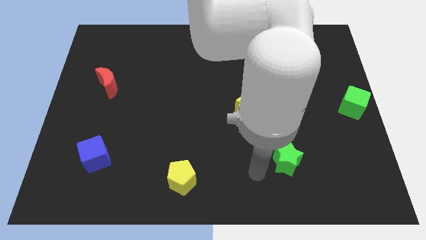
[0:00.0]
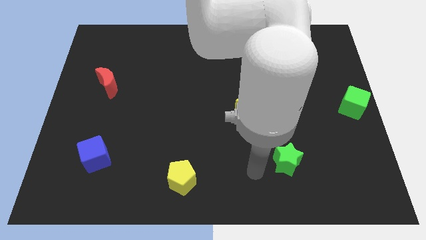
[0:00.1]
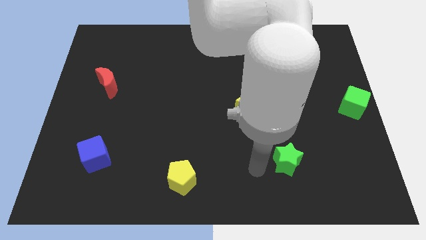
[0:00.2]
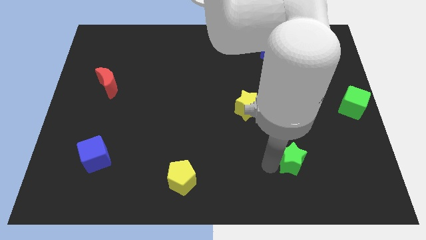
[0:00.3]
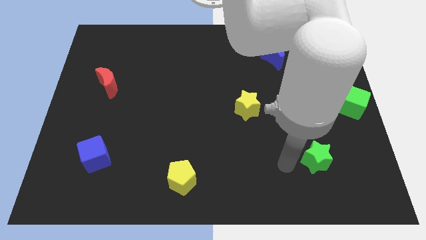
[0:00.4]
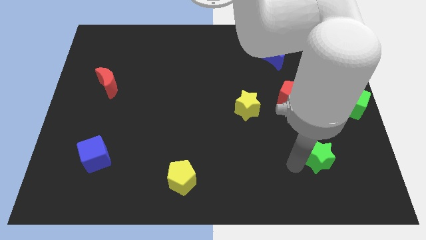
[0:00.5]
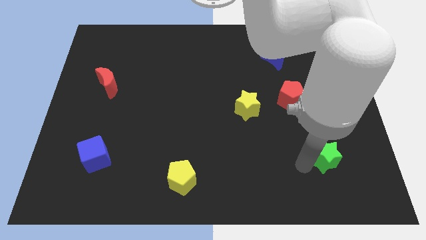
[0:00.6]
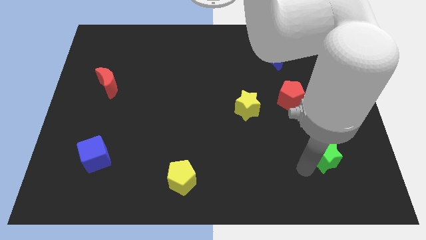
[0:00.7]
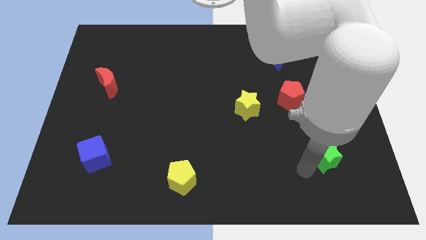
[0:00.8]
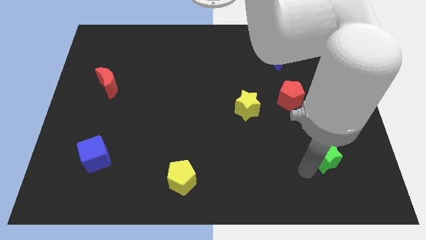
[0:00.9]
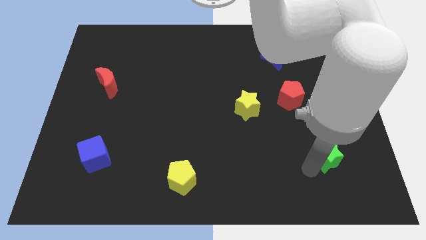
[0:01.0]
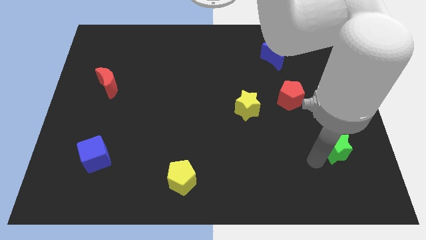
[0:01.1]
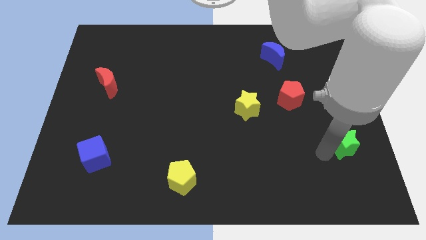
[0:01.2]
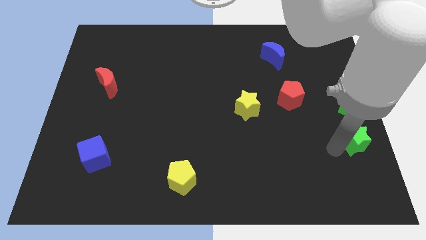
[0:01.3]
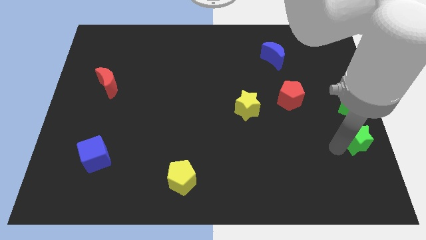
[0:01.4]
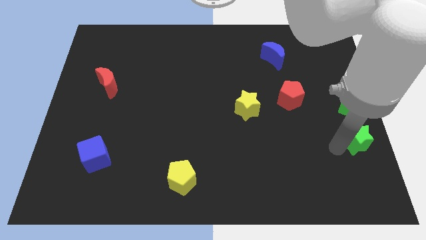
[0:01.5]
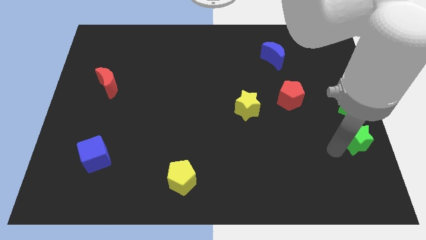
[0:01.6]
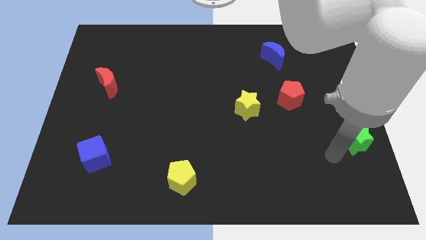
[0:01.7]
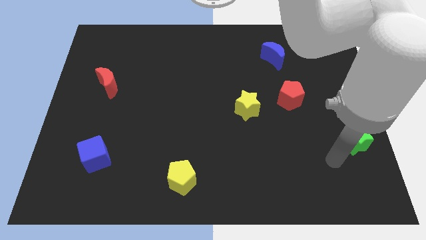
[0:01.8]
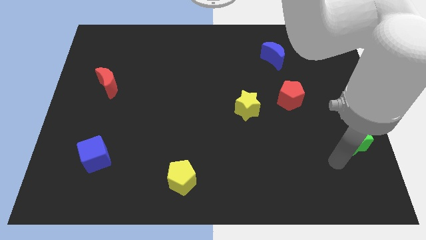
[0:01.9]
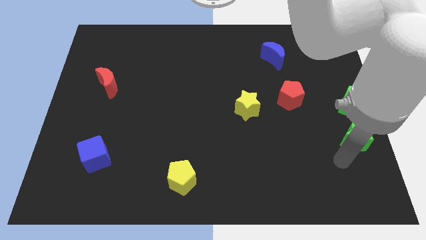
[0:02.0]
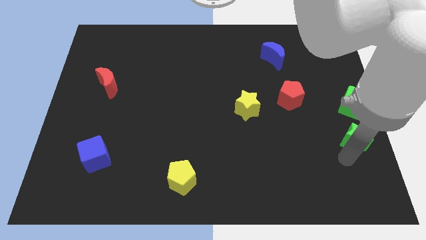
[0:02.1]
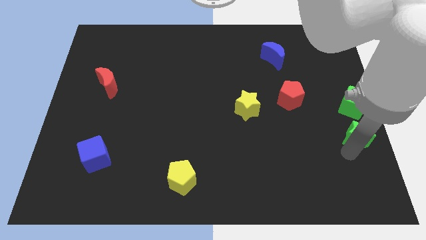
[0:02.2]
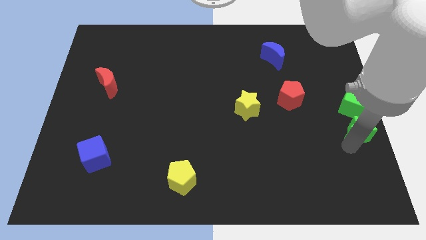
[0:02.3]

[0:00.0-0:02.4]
push the green star to the right side of the board

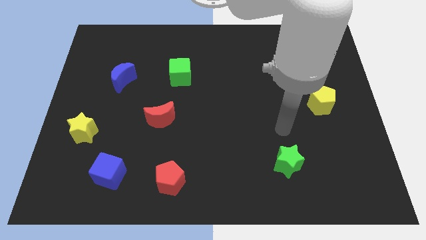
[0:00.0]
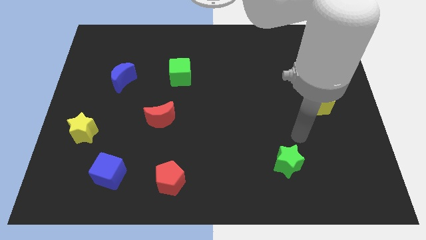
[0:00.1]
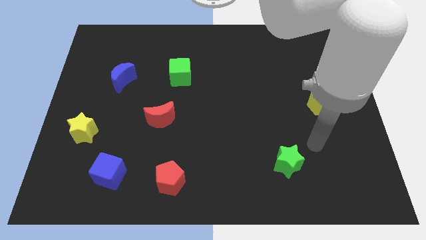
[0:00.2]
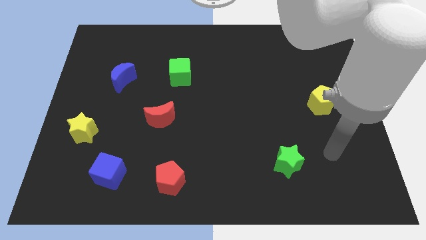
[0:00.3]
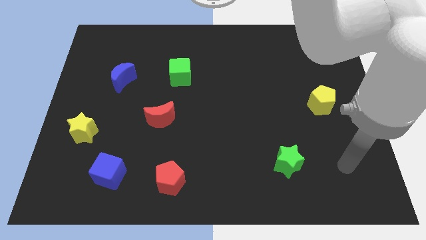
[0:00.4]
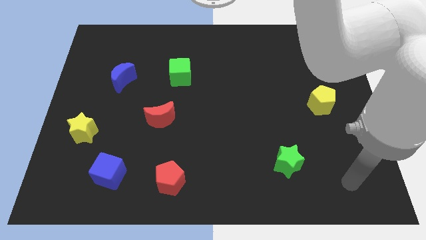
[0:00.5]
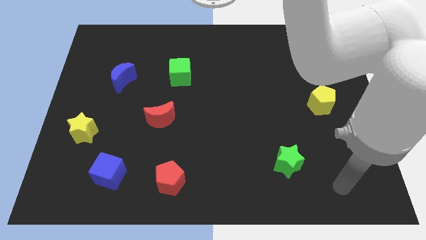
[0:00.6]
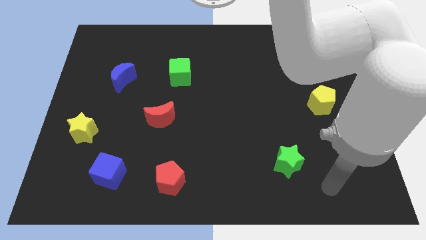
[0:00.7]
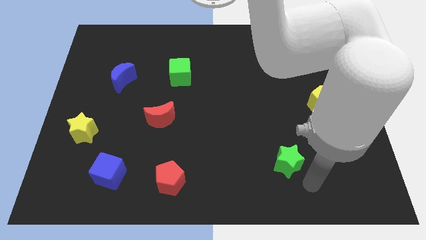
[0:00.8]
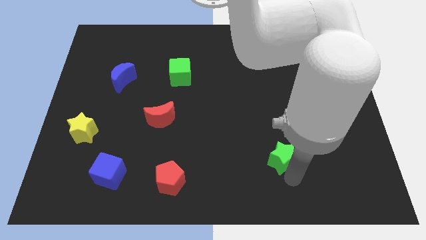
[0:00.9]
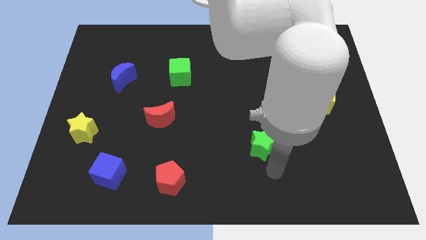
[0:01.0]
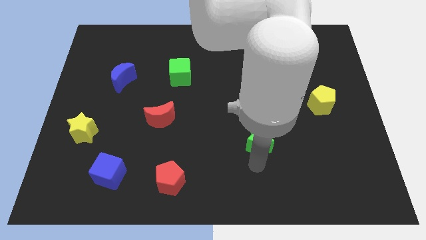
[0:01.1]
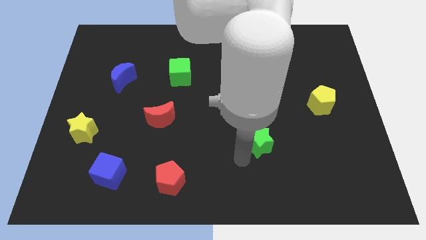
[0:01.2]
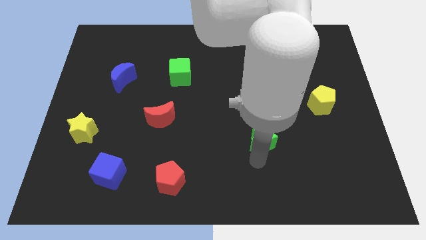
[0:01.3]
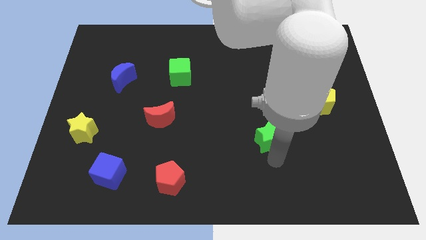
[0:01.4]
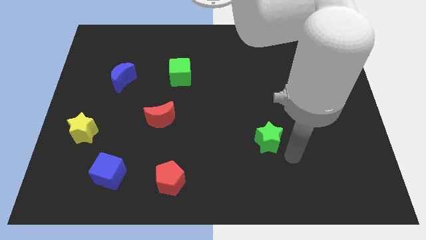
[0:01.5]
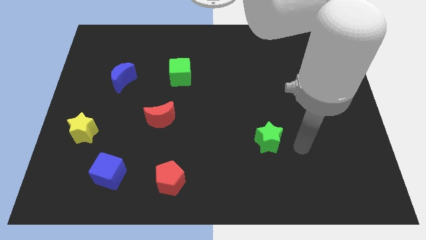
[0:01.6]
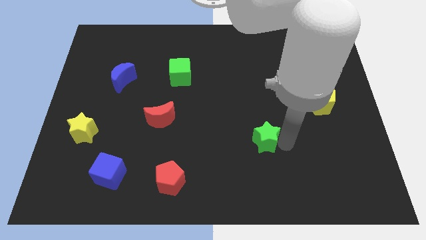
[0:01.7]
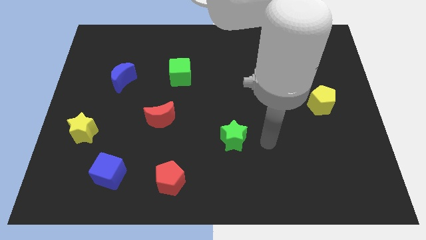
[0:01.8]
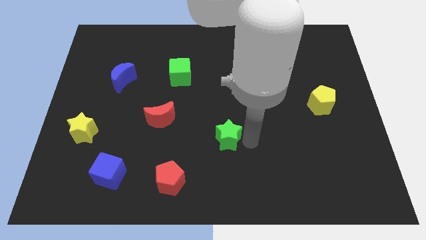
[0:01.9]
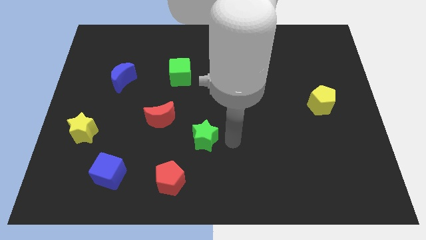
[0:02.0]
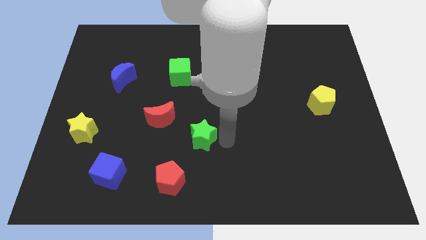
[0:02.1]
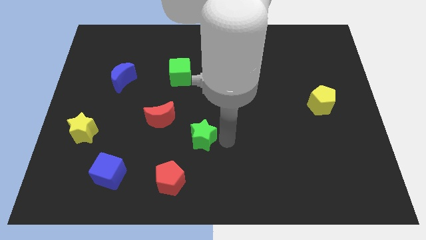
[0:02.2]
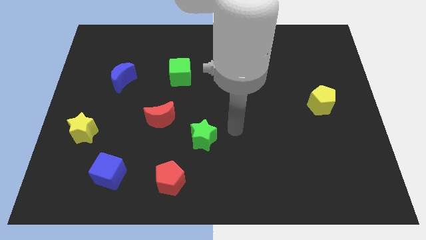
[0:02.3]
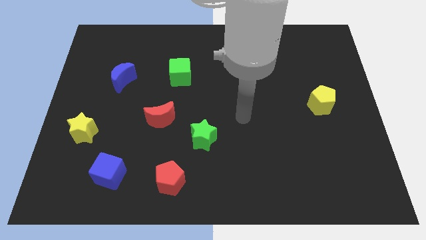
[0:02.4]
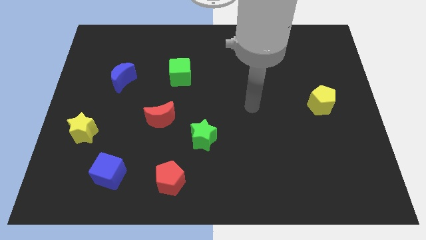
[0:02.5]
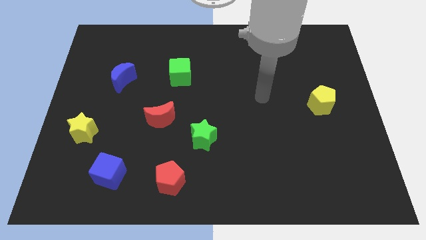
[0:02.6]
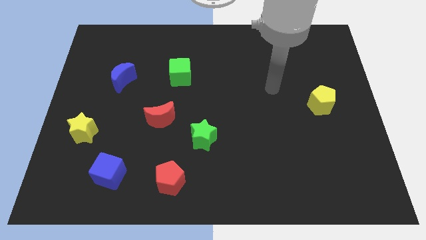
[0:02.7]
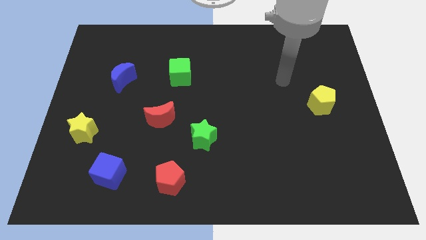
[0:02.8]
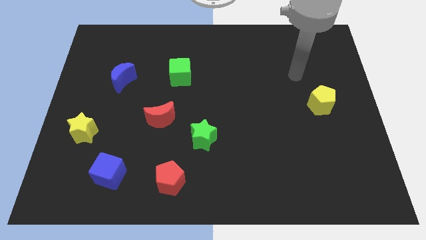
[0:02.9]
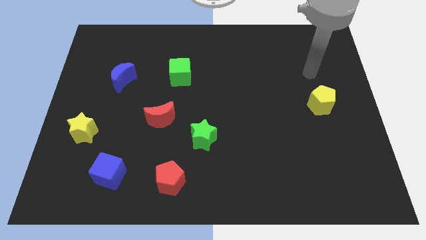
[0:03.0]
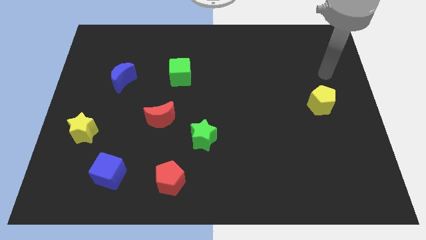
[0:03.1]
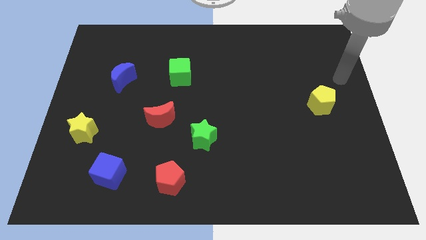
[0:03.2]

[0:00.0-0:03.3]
move the green star towards the red moon

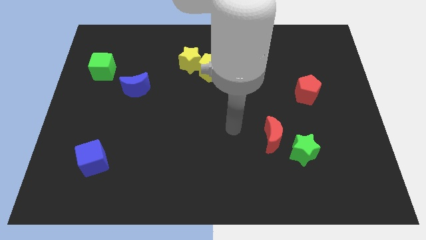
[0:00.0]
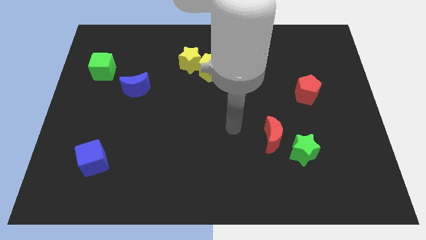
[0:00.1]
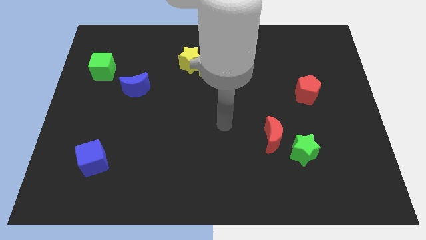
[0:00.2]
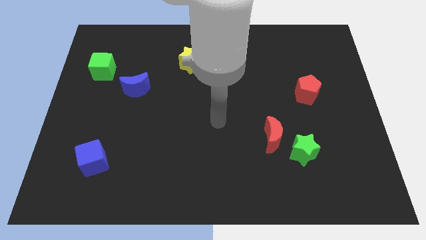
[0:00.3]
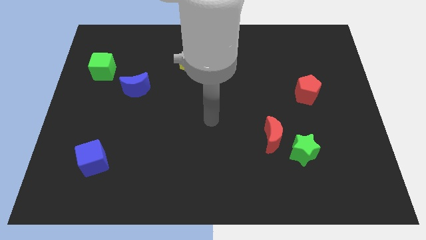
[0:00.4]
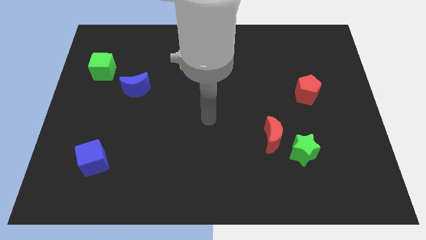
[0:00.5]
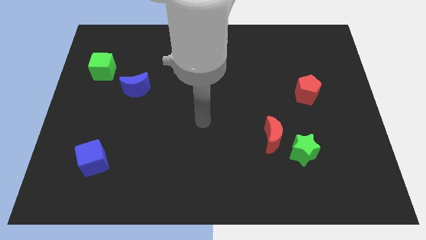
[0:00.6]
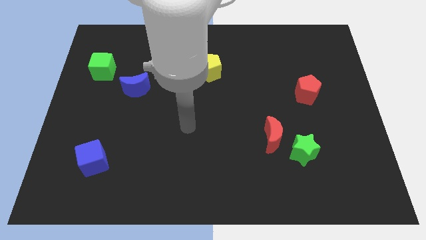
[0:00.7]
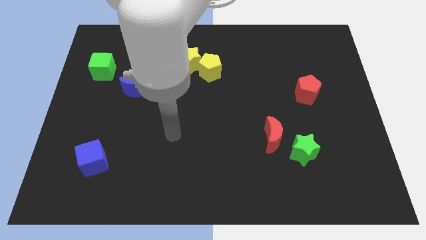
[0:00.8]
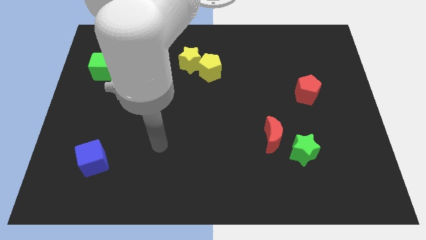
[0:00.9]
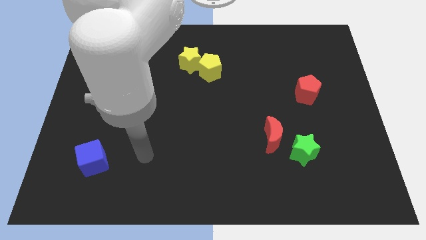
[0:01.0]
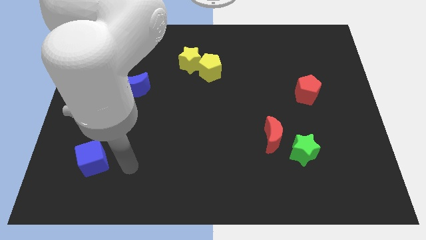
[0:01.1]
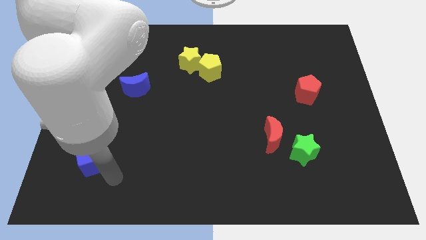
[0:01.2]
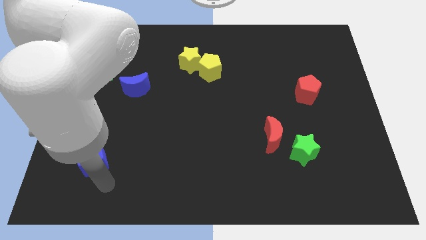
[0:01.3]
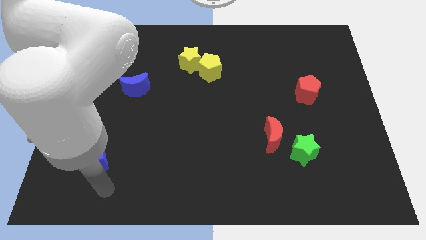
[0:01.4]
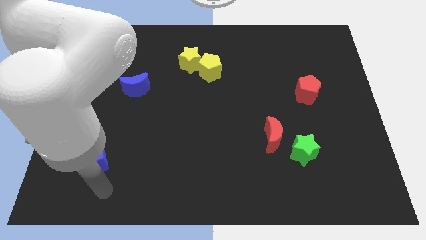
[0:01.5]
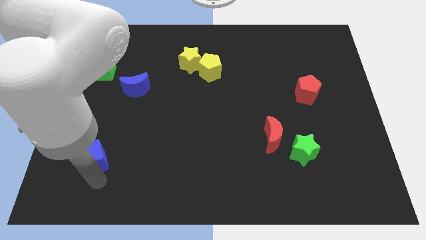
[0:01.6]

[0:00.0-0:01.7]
move your arm below blue cube

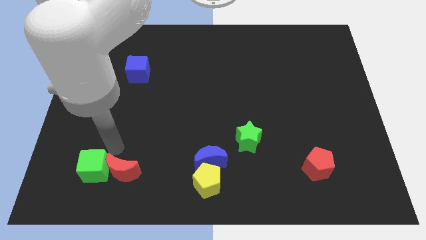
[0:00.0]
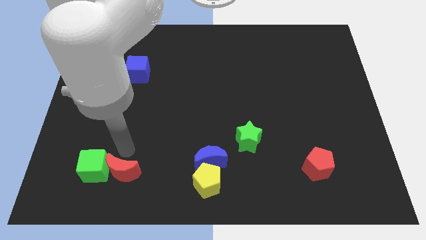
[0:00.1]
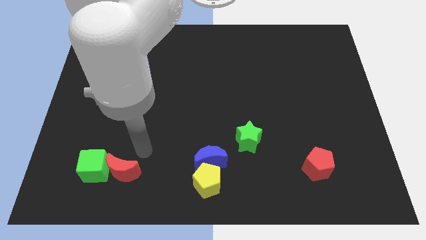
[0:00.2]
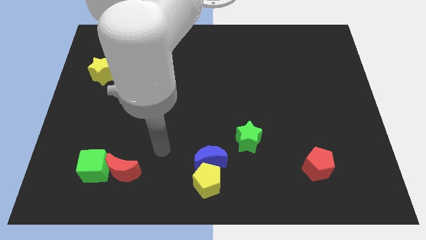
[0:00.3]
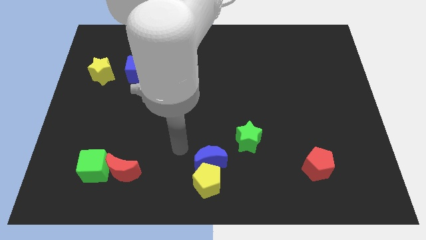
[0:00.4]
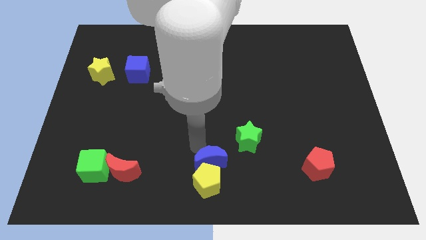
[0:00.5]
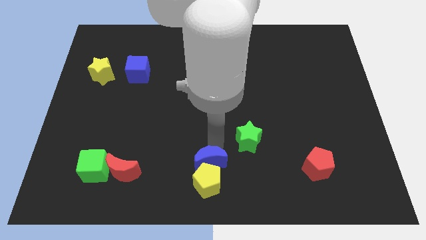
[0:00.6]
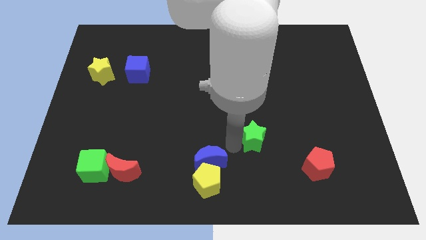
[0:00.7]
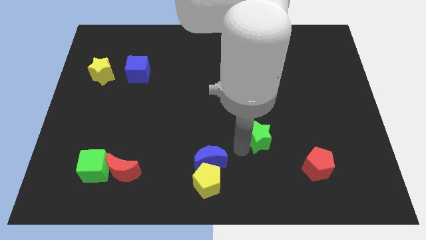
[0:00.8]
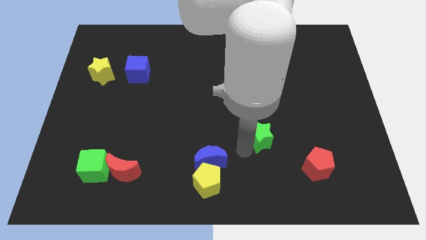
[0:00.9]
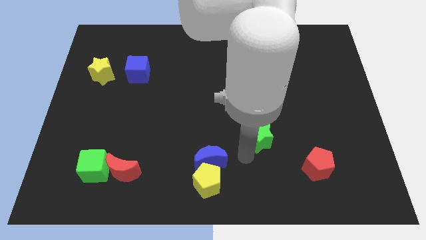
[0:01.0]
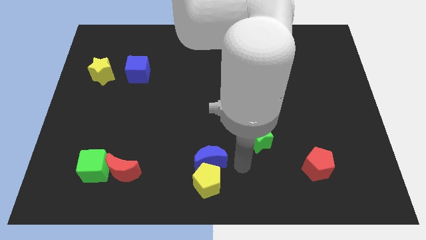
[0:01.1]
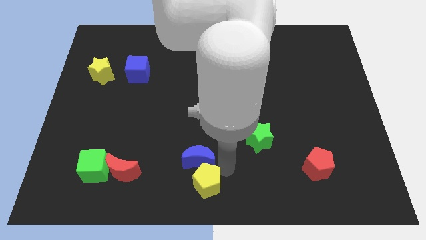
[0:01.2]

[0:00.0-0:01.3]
move the arm towards the right of the blue crescent

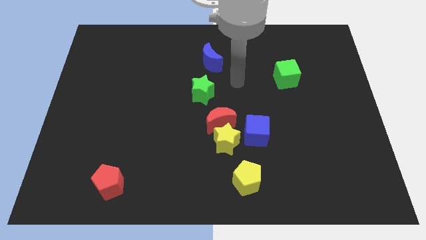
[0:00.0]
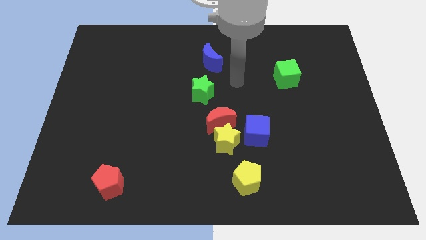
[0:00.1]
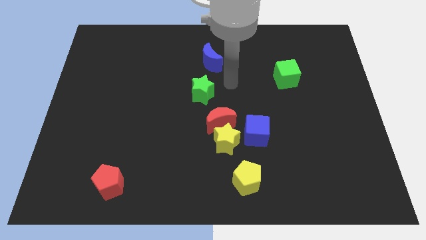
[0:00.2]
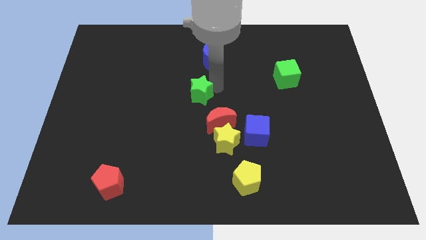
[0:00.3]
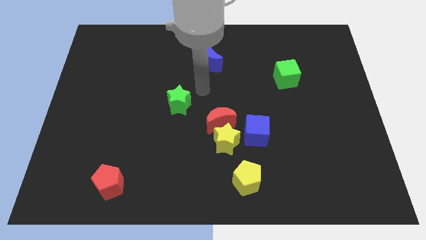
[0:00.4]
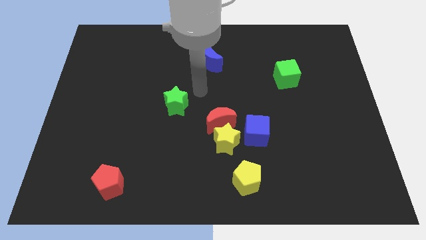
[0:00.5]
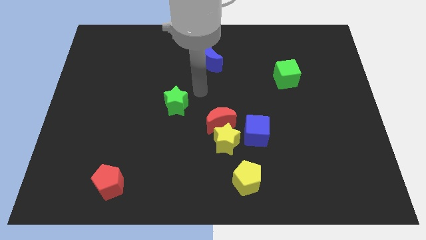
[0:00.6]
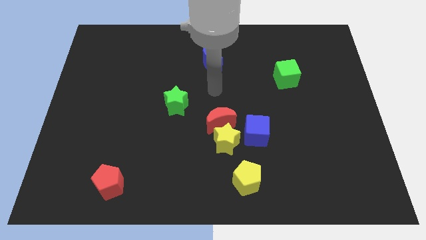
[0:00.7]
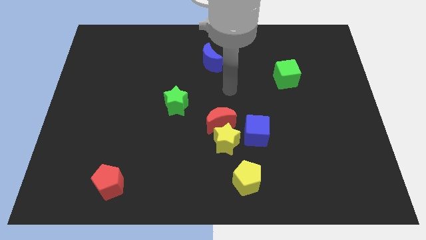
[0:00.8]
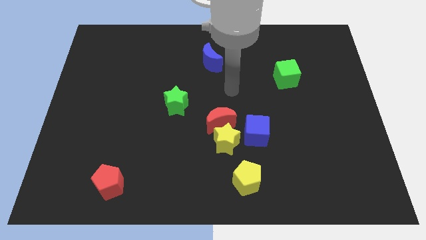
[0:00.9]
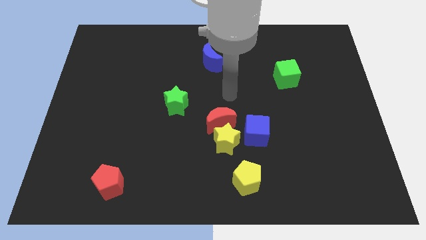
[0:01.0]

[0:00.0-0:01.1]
push the green star to the left of the board
